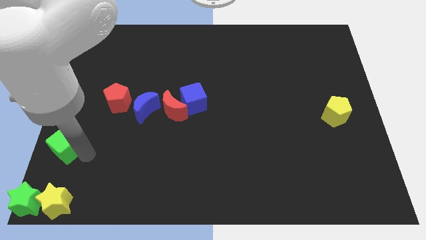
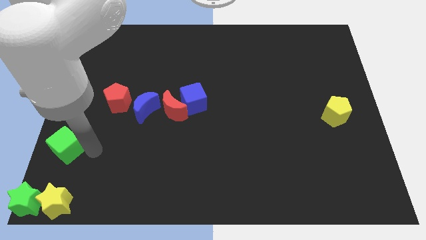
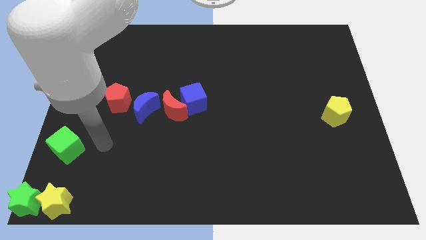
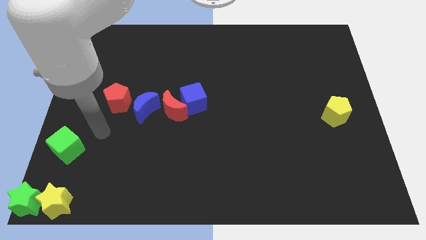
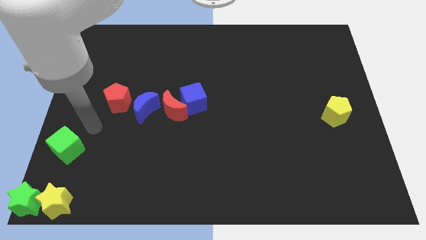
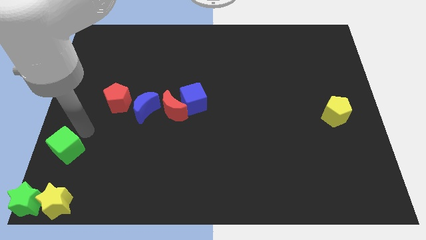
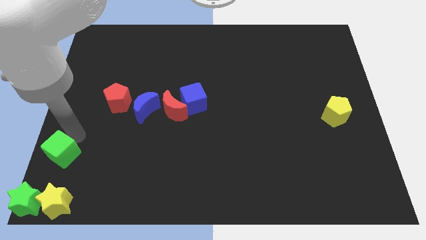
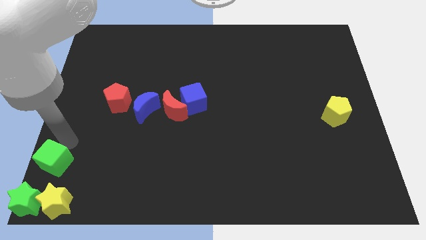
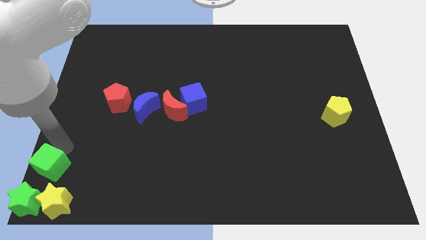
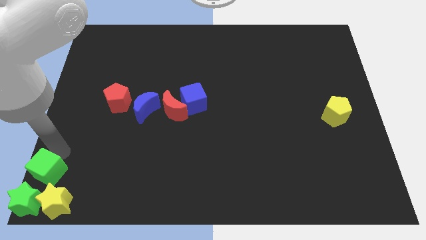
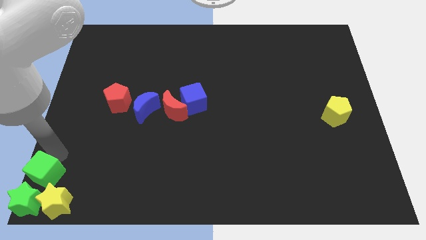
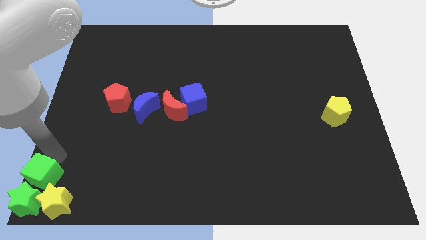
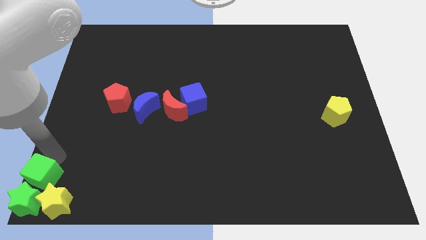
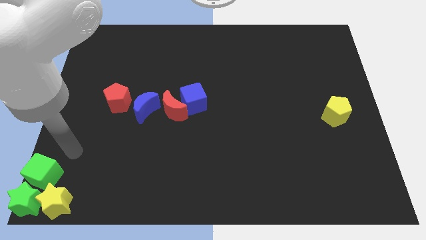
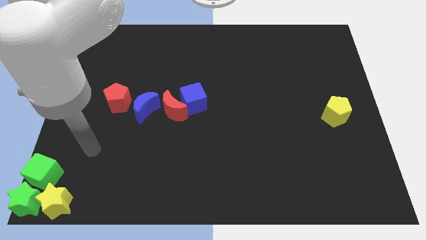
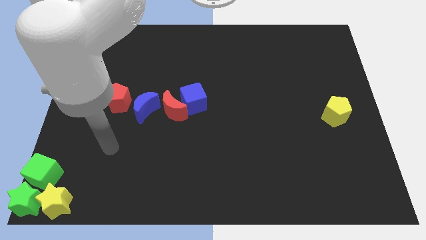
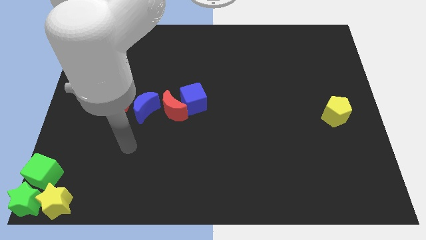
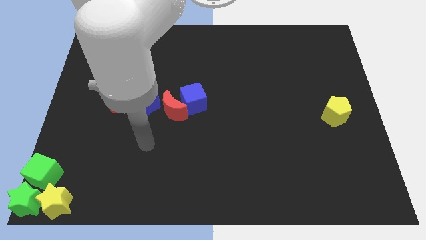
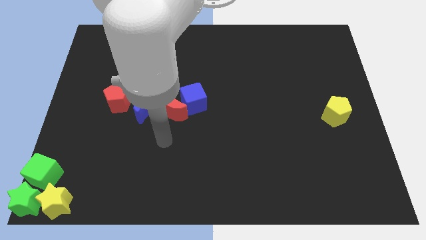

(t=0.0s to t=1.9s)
slide the green cube at the top of the green star

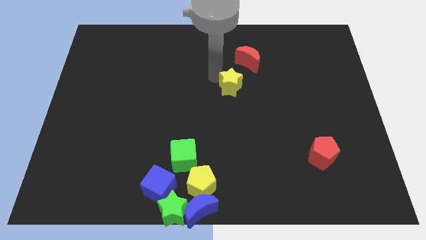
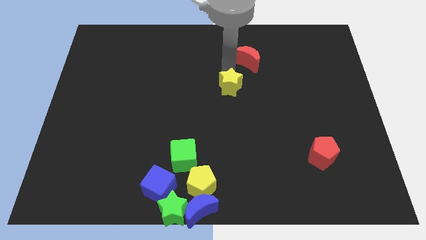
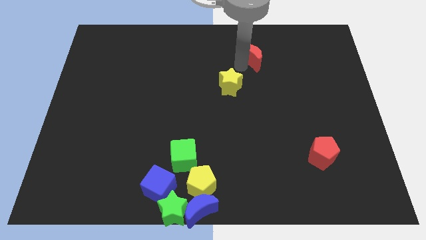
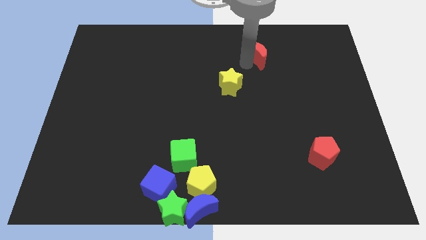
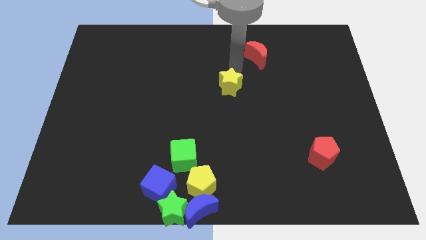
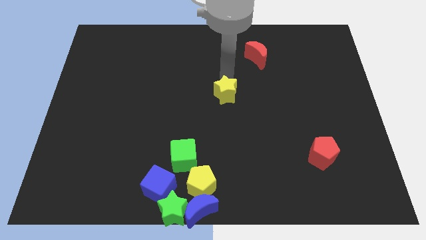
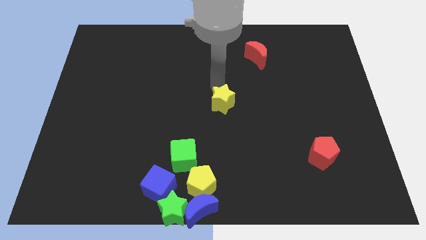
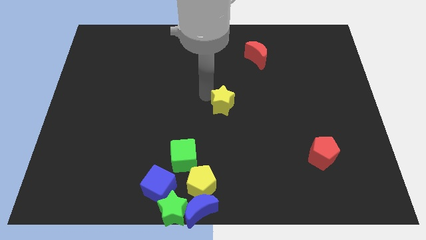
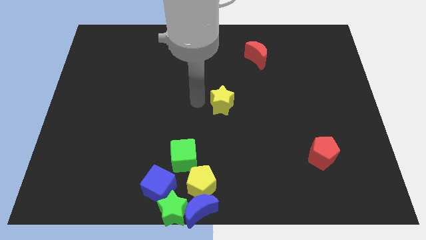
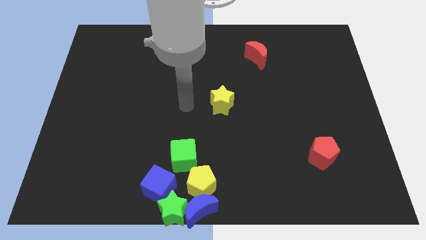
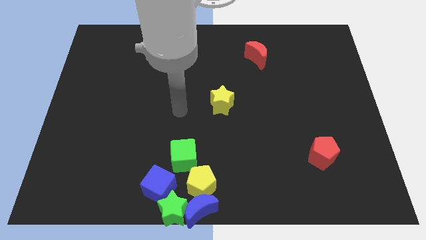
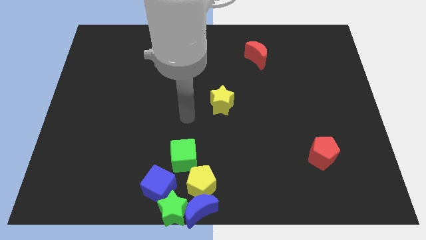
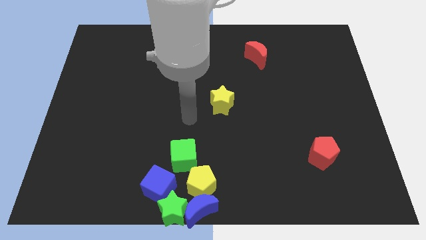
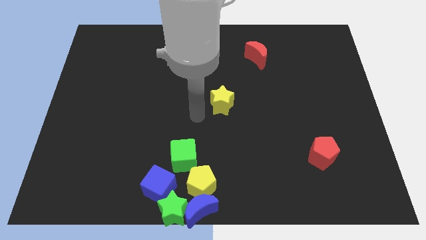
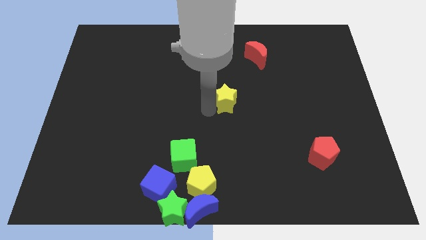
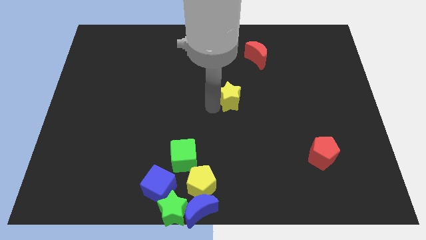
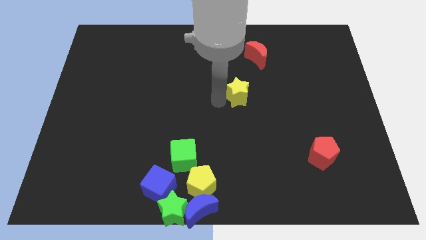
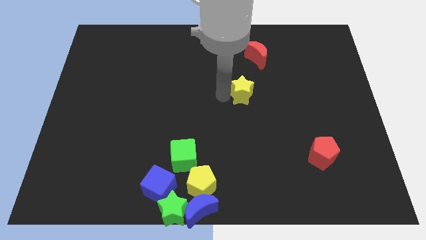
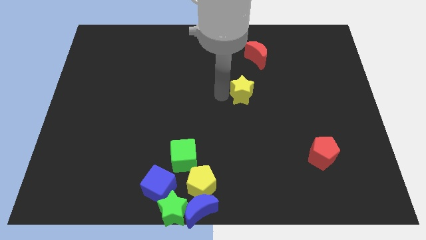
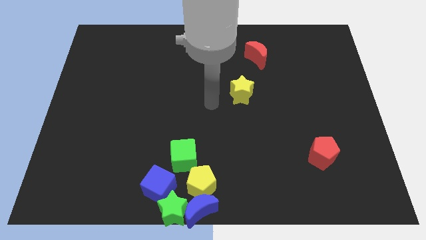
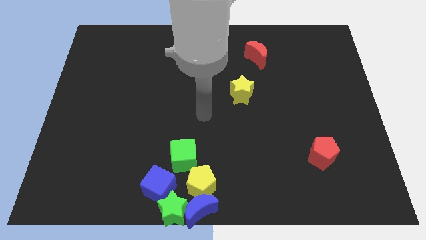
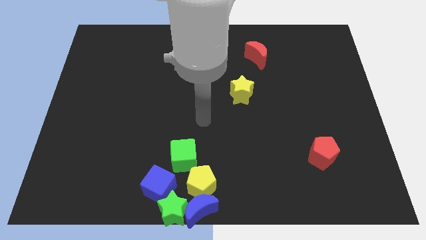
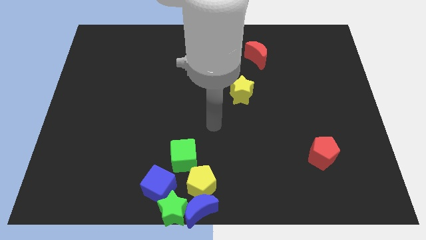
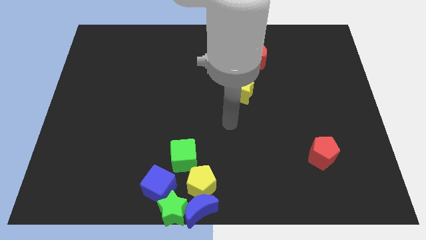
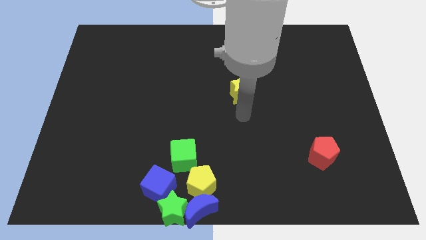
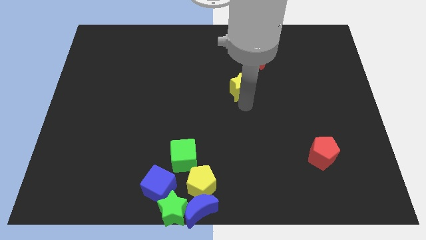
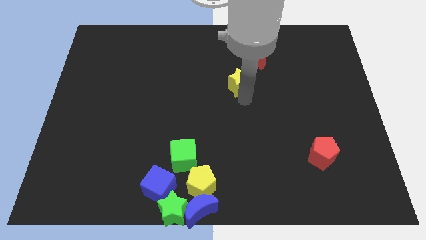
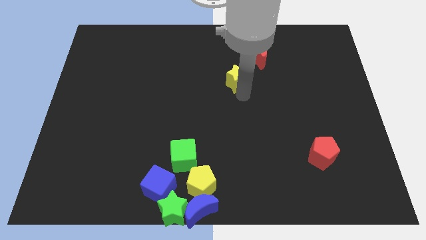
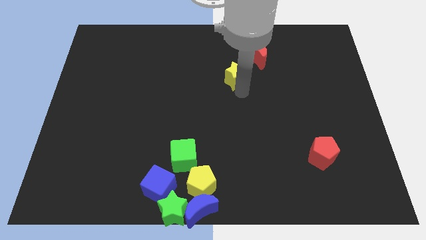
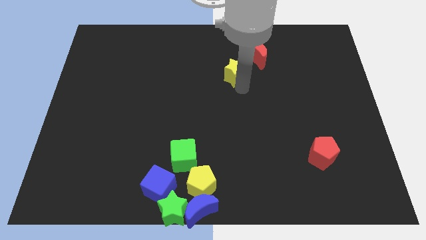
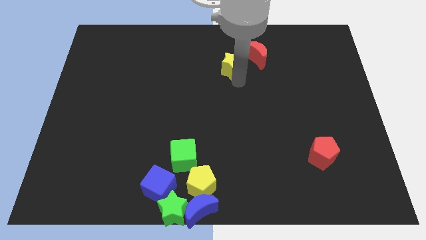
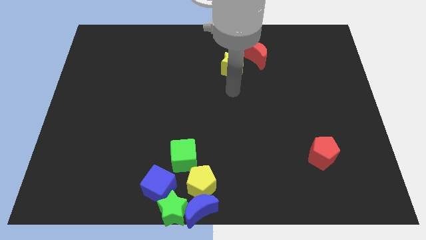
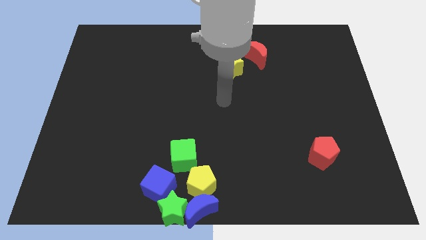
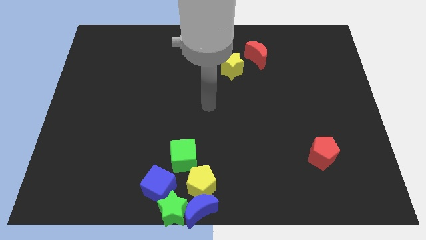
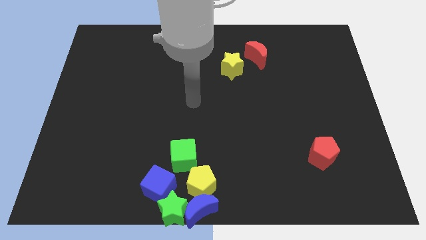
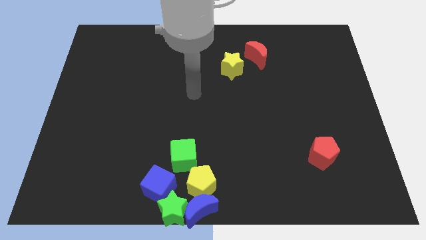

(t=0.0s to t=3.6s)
move yellow star to the red moon

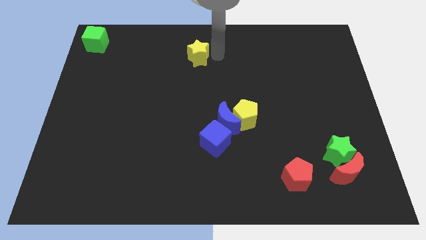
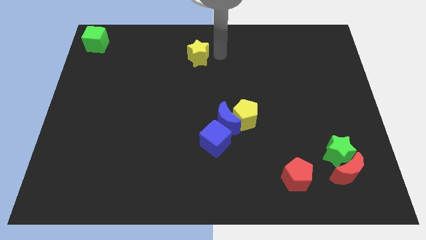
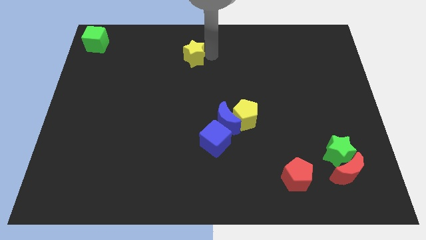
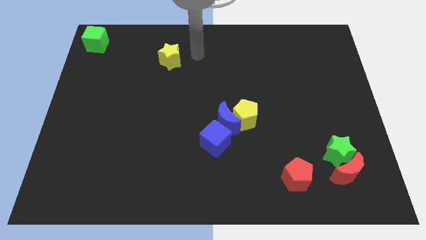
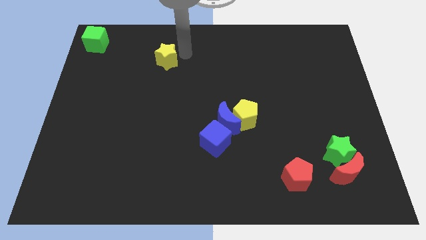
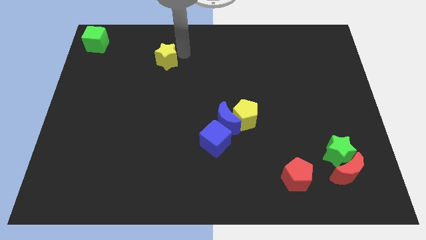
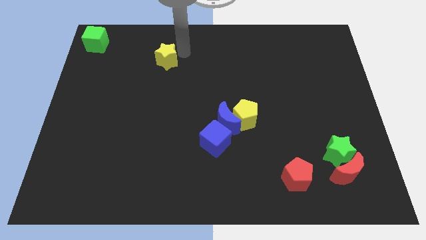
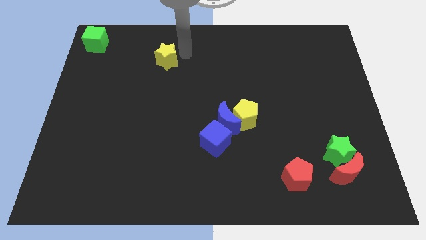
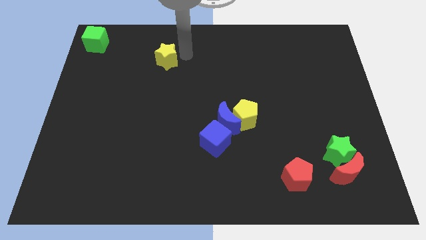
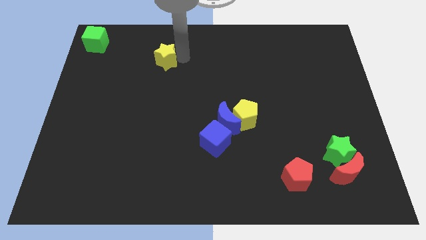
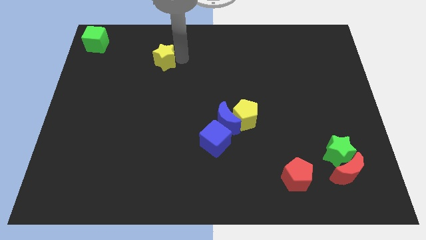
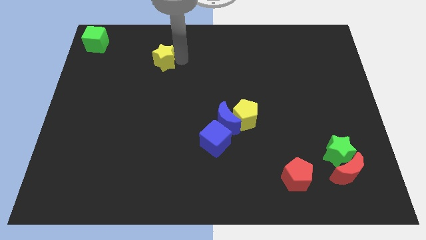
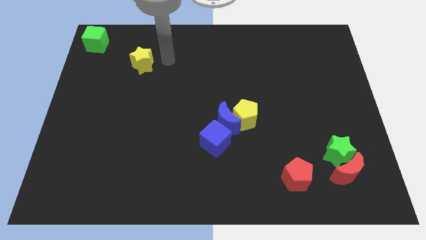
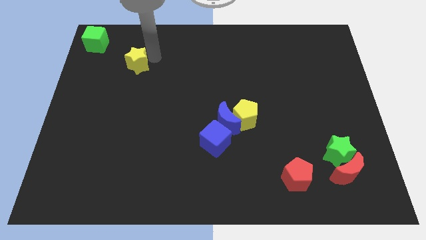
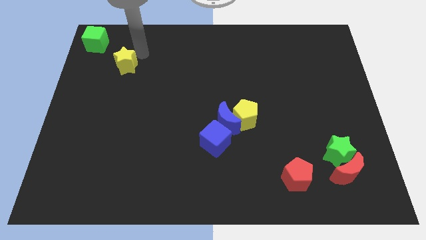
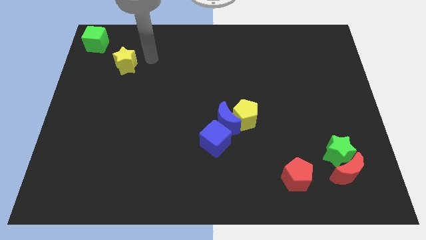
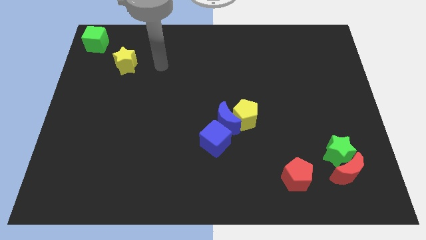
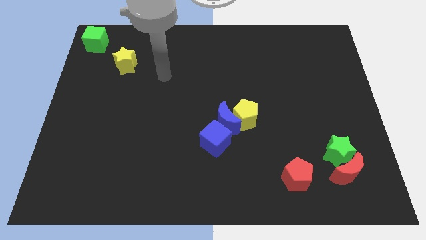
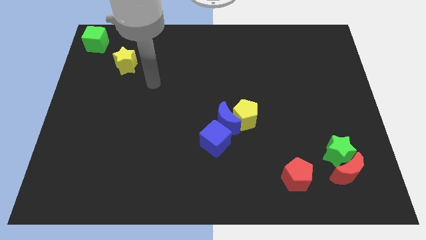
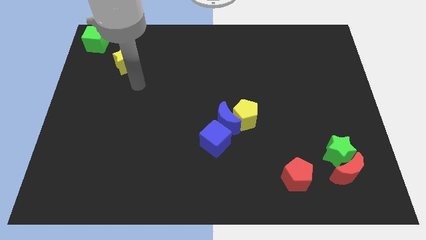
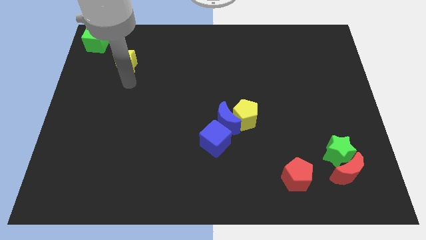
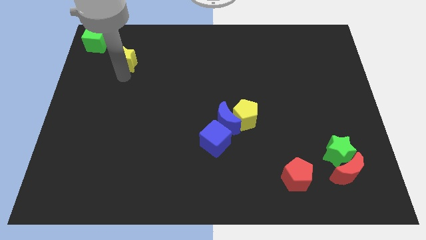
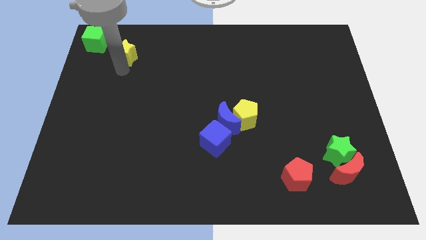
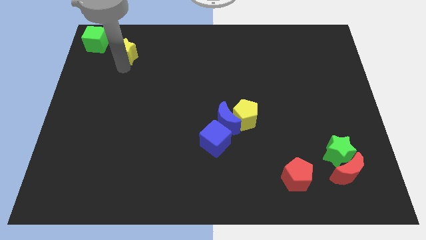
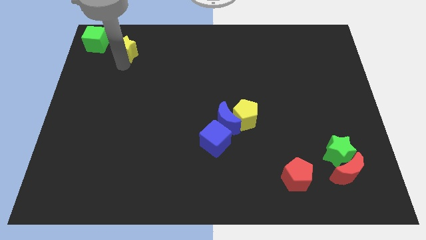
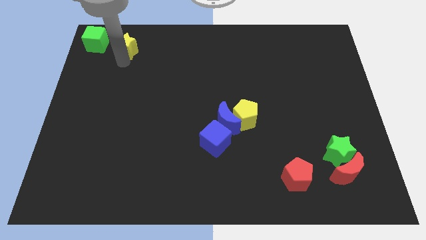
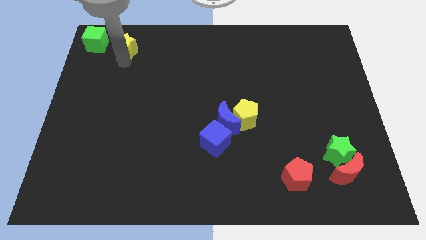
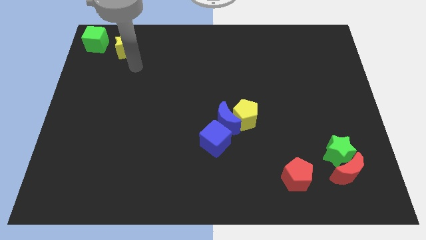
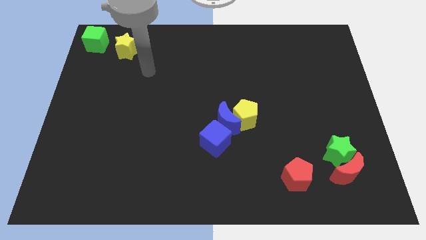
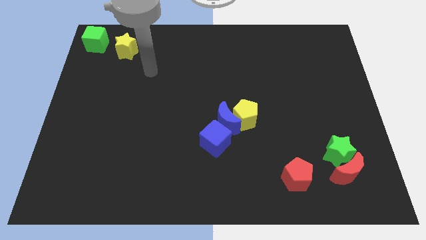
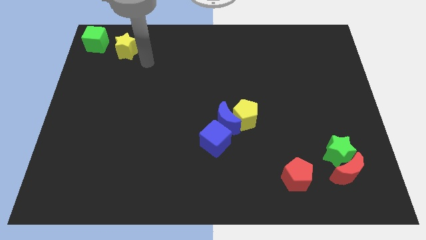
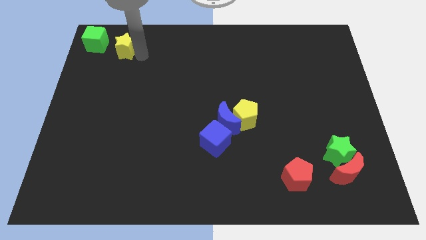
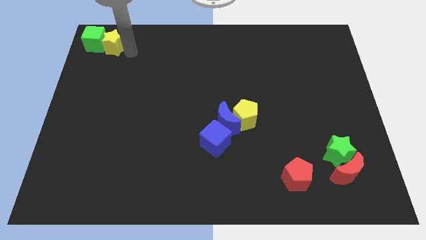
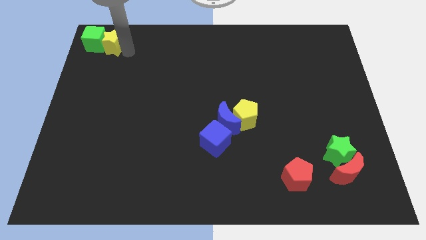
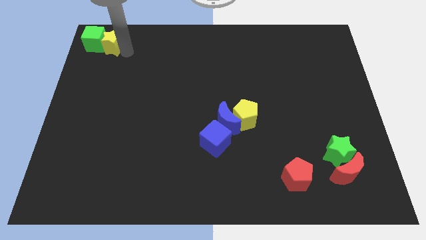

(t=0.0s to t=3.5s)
arrange the yellow star on the right side of the green cube
